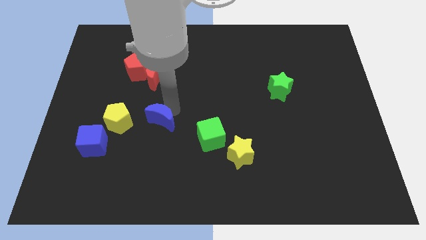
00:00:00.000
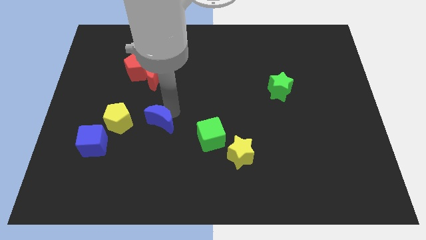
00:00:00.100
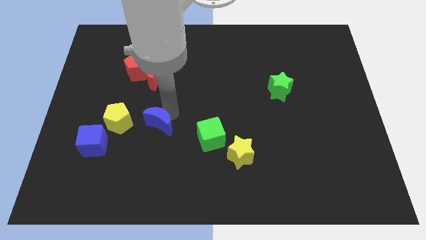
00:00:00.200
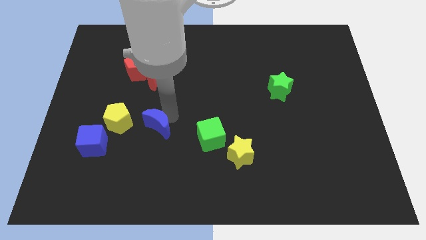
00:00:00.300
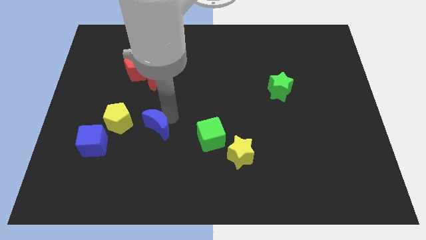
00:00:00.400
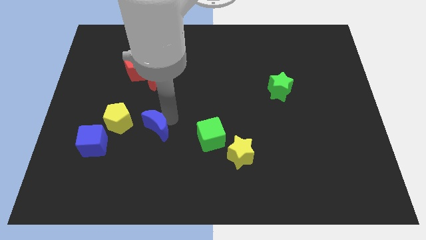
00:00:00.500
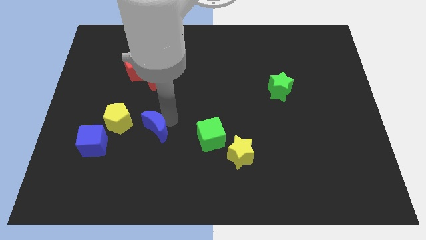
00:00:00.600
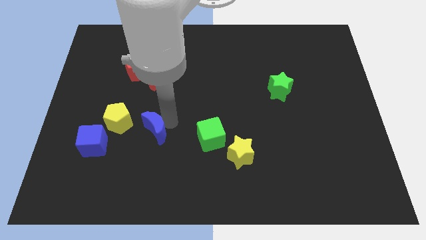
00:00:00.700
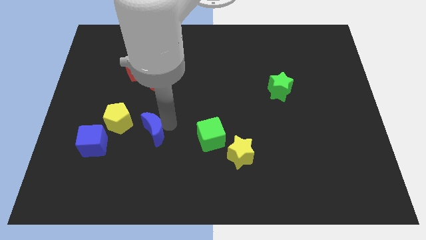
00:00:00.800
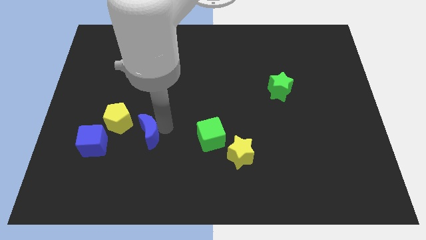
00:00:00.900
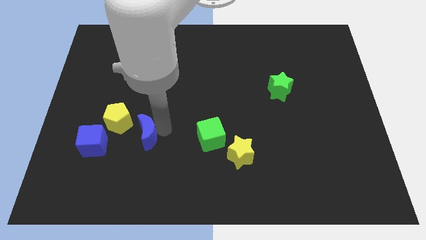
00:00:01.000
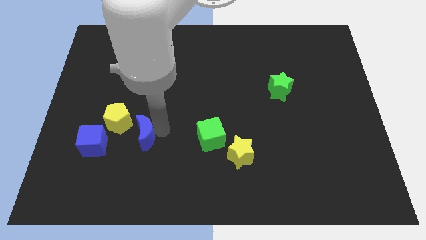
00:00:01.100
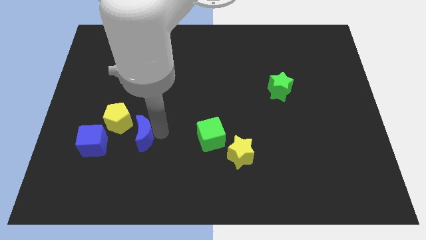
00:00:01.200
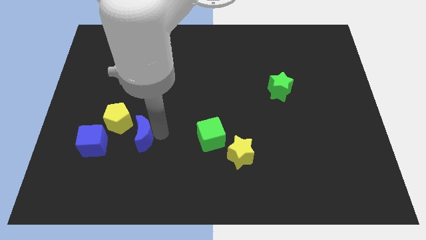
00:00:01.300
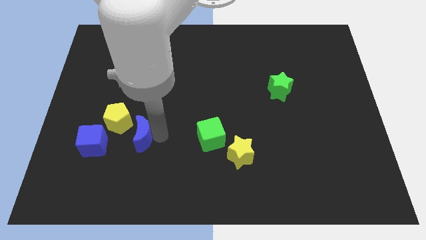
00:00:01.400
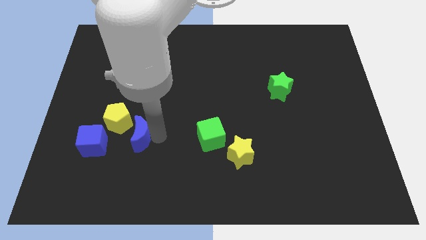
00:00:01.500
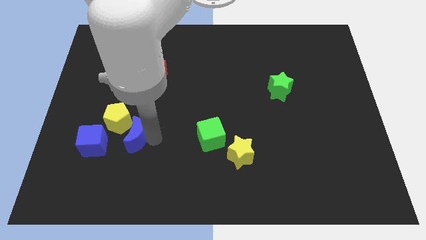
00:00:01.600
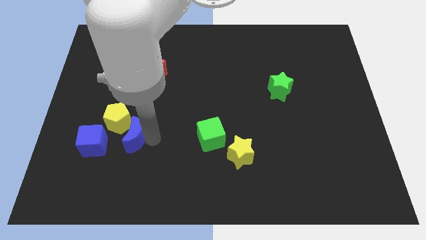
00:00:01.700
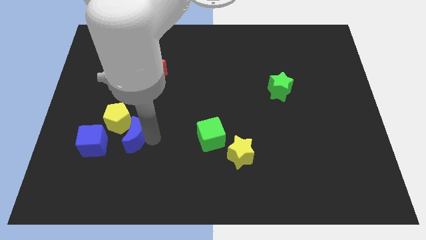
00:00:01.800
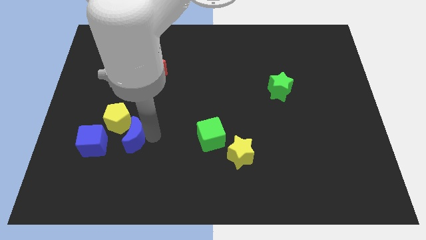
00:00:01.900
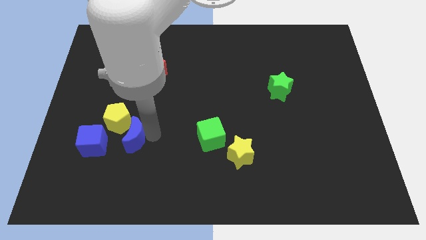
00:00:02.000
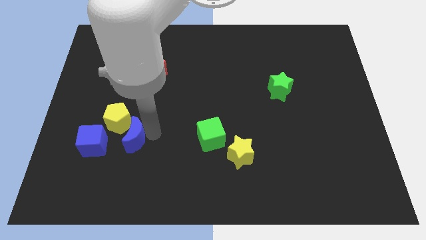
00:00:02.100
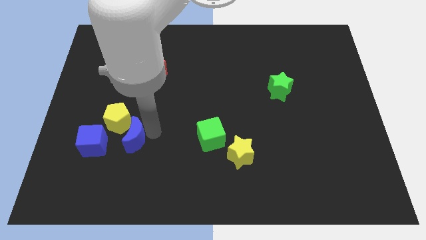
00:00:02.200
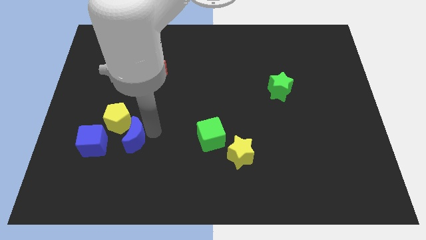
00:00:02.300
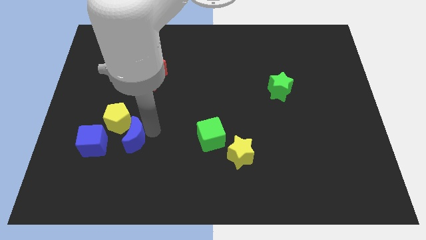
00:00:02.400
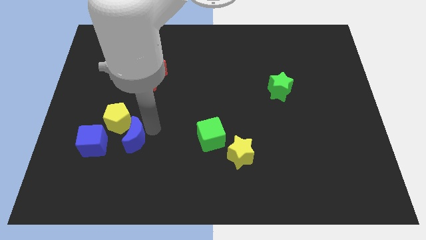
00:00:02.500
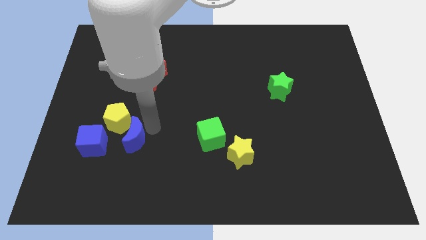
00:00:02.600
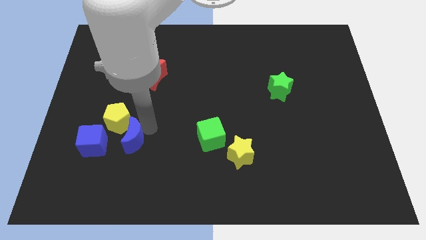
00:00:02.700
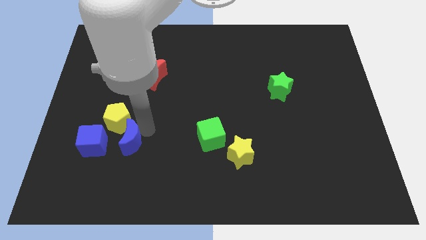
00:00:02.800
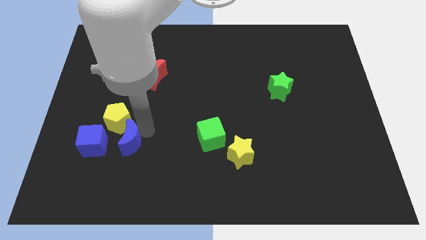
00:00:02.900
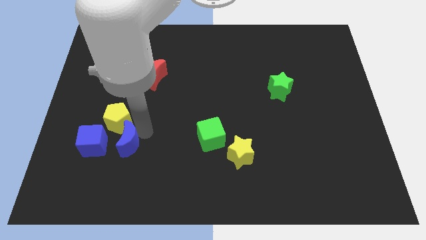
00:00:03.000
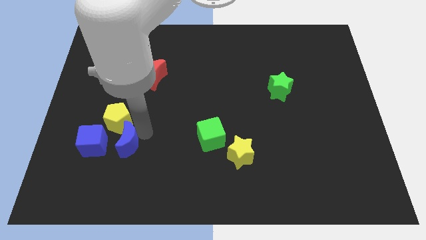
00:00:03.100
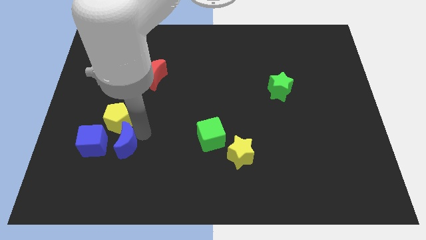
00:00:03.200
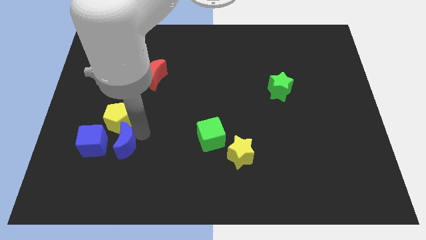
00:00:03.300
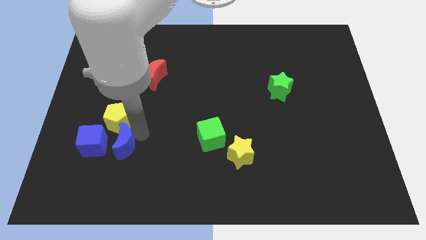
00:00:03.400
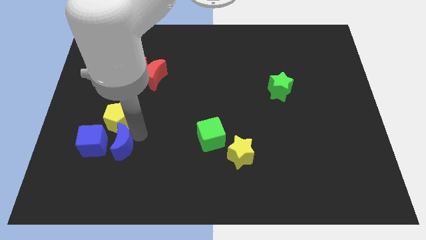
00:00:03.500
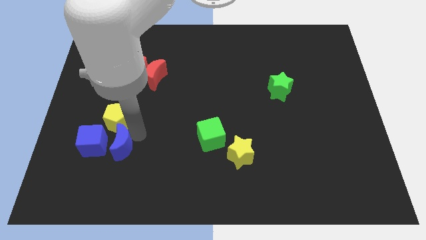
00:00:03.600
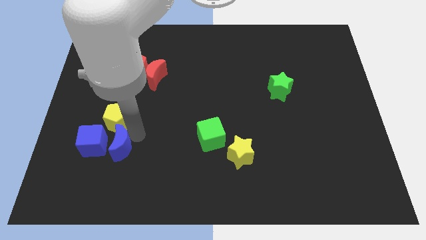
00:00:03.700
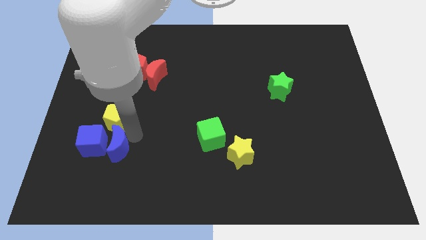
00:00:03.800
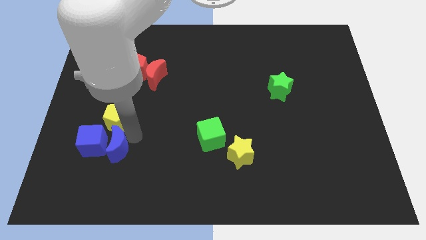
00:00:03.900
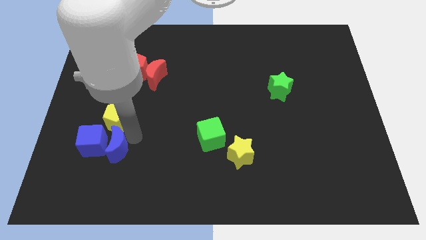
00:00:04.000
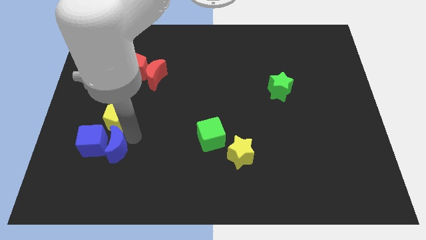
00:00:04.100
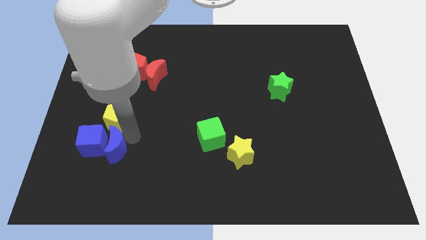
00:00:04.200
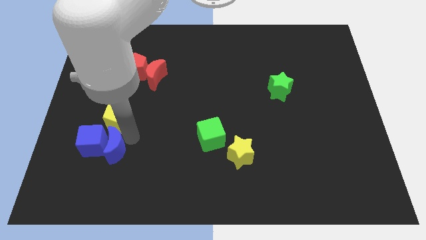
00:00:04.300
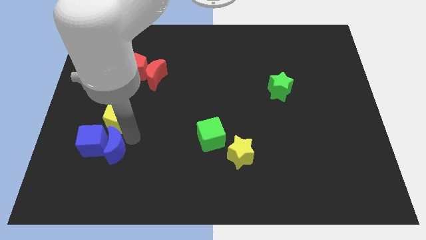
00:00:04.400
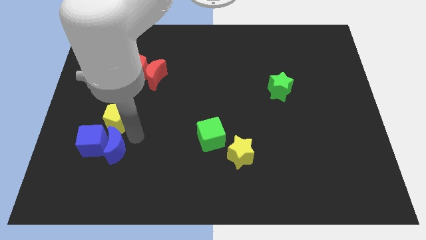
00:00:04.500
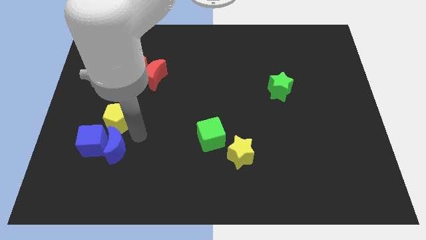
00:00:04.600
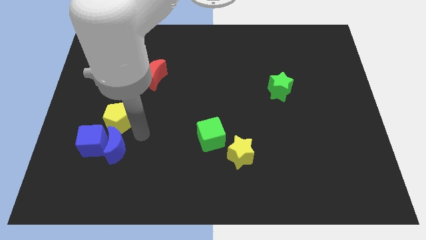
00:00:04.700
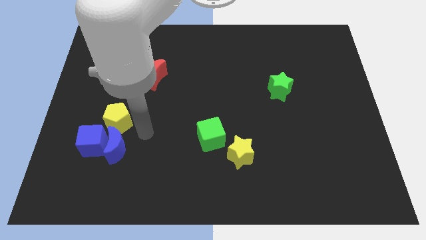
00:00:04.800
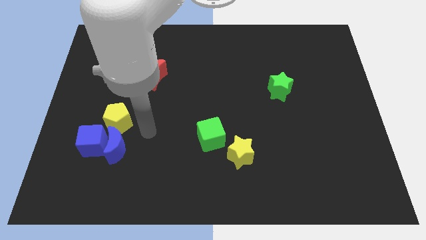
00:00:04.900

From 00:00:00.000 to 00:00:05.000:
move blue crescent close to blue cube

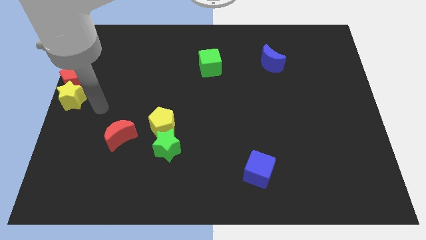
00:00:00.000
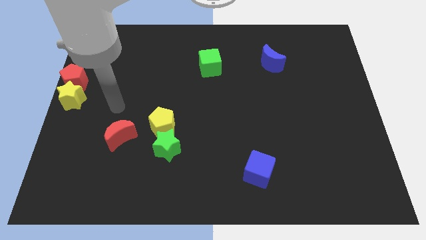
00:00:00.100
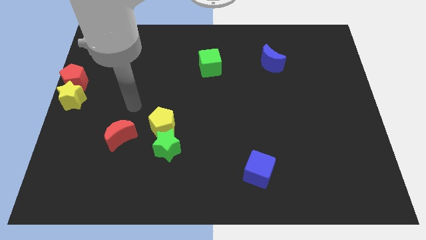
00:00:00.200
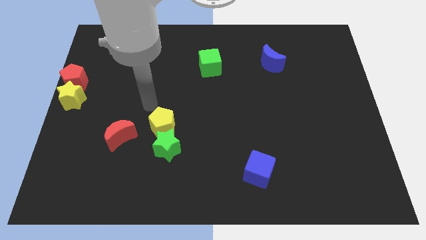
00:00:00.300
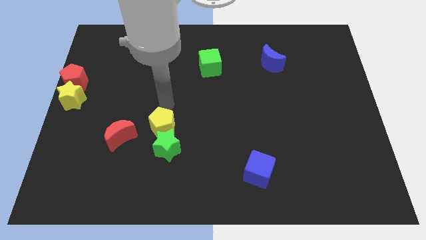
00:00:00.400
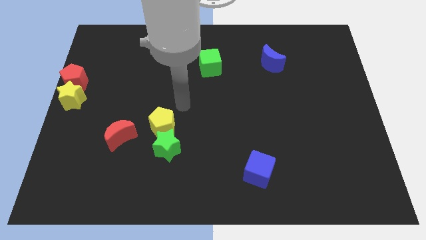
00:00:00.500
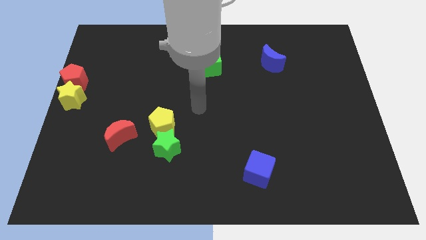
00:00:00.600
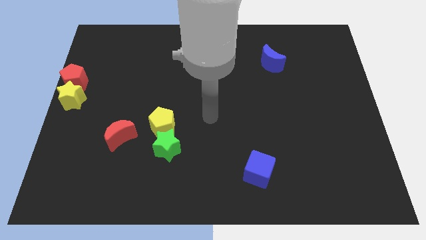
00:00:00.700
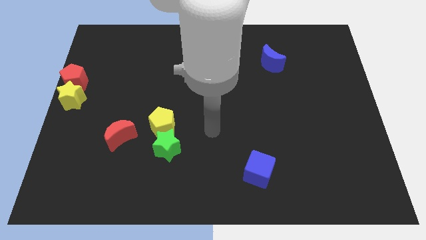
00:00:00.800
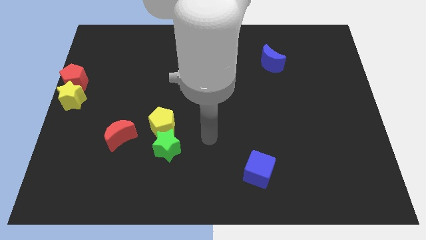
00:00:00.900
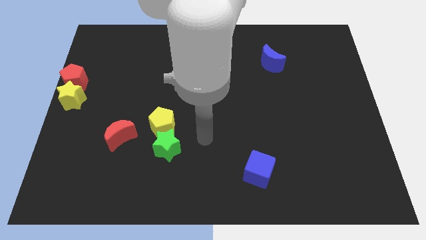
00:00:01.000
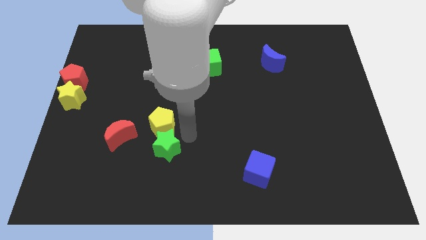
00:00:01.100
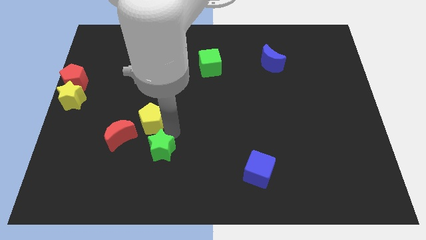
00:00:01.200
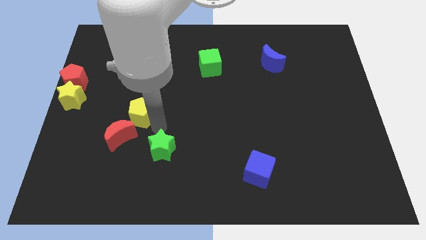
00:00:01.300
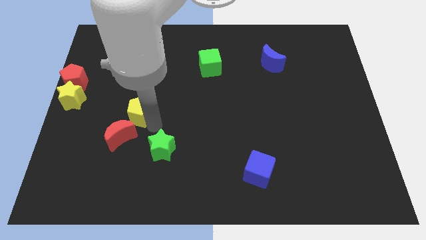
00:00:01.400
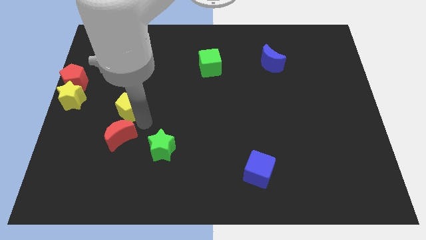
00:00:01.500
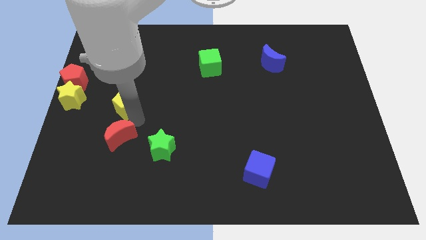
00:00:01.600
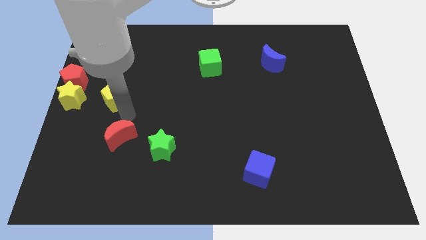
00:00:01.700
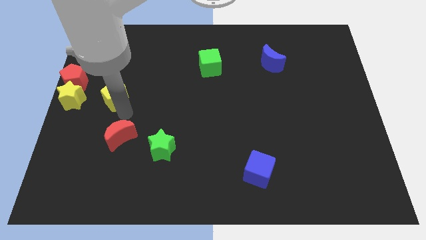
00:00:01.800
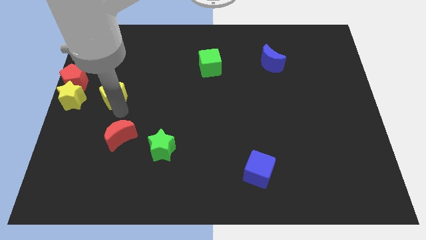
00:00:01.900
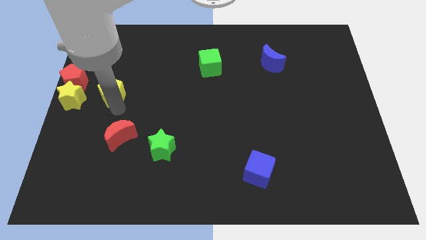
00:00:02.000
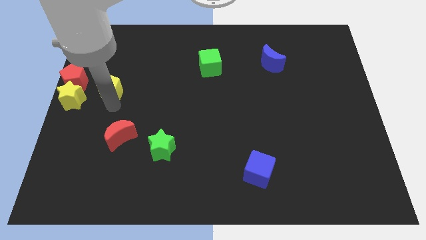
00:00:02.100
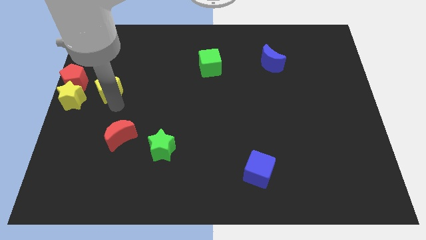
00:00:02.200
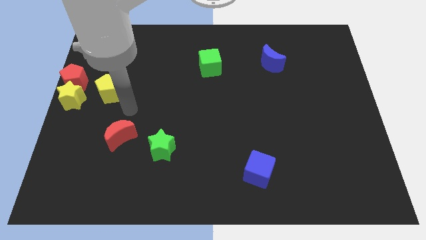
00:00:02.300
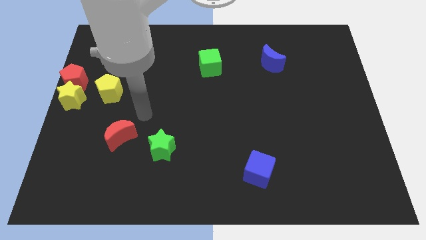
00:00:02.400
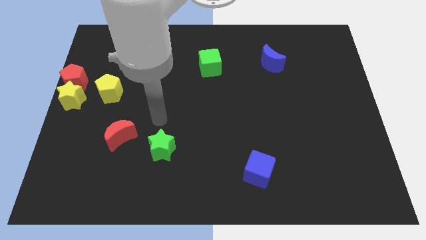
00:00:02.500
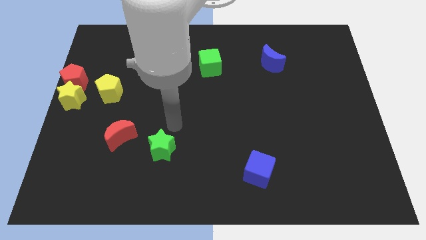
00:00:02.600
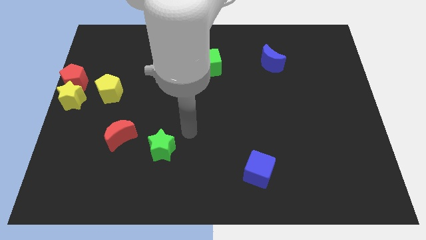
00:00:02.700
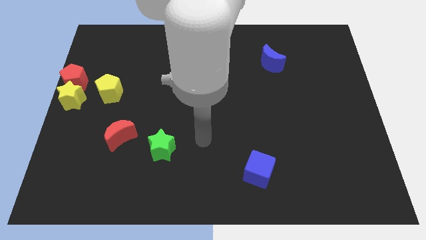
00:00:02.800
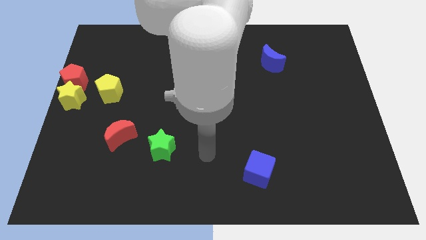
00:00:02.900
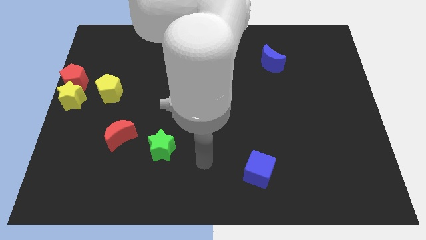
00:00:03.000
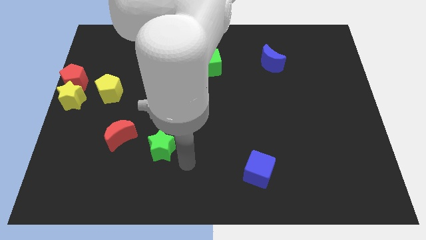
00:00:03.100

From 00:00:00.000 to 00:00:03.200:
push the yellow pentagon close to the blocks

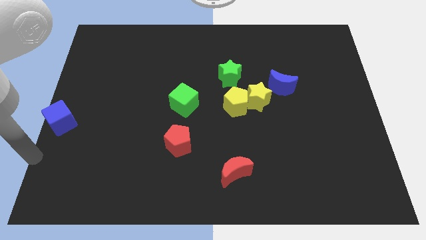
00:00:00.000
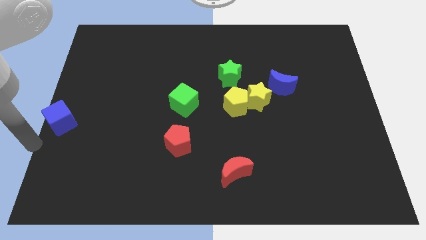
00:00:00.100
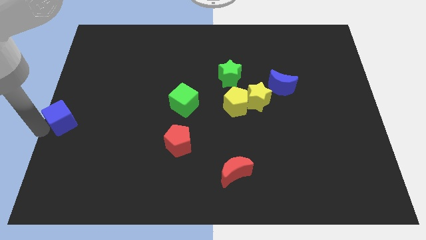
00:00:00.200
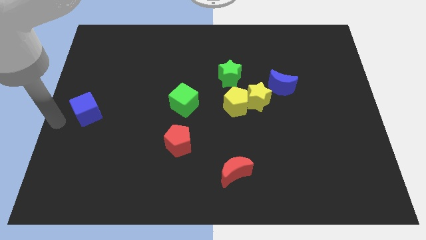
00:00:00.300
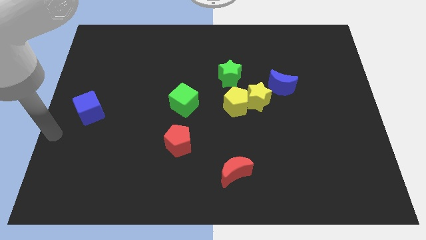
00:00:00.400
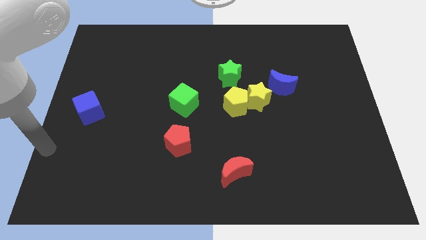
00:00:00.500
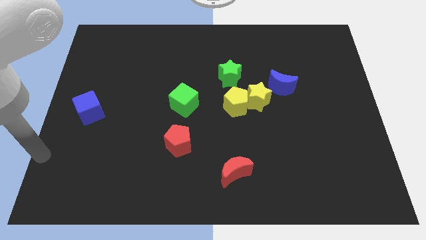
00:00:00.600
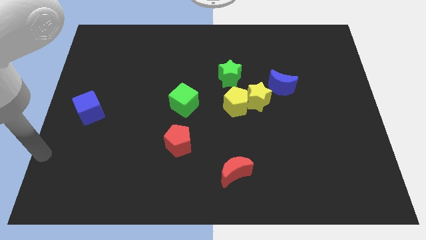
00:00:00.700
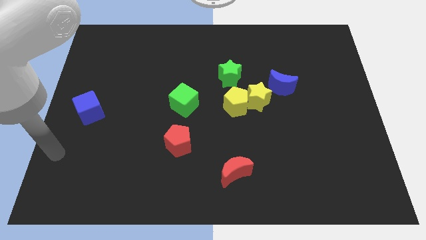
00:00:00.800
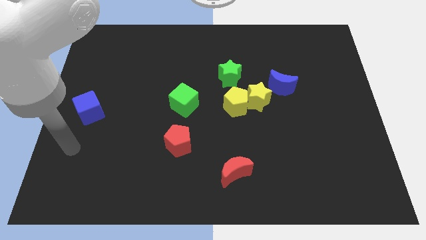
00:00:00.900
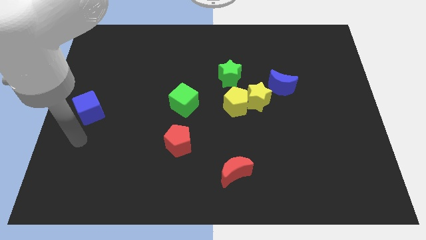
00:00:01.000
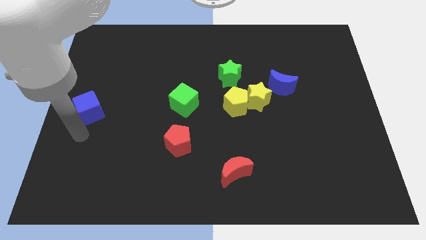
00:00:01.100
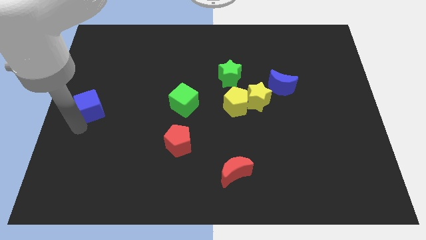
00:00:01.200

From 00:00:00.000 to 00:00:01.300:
place the blue cube parallel to green cube
